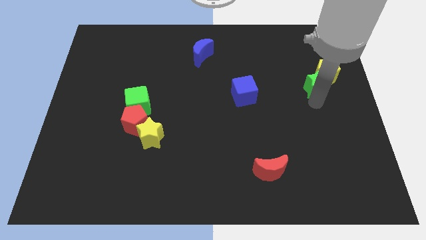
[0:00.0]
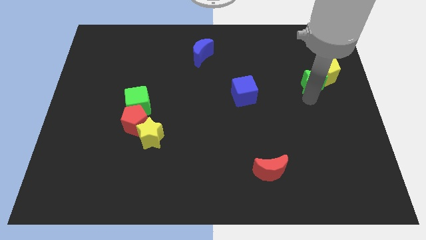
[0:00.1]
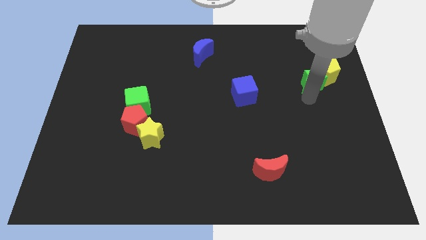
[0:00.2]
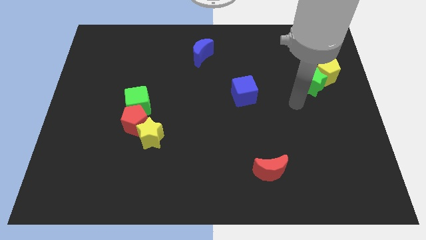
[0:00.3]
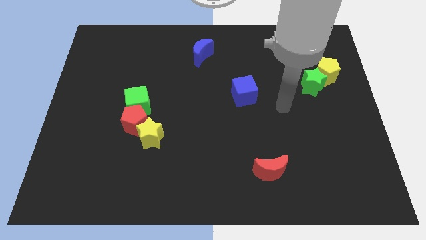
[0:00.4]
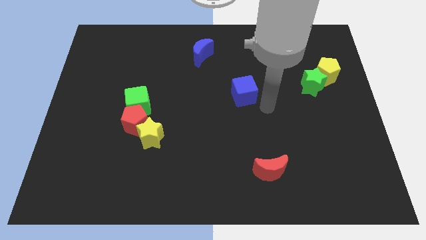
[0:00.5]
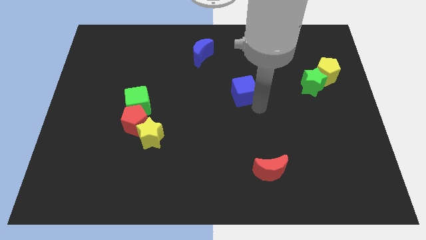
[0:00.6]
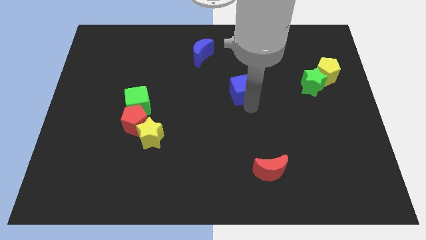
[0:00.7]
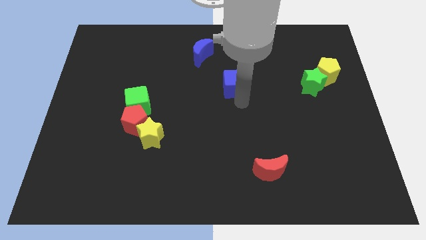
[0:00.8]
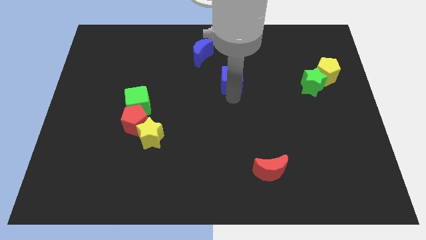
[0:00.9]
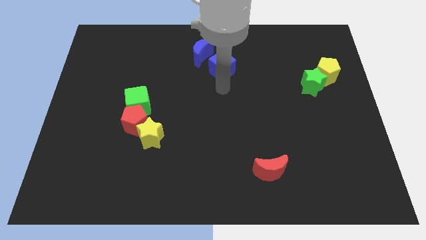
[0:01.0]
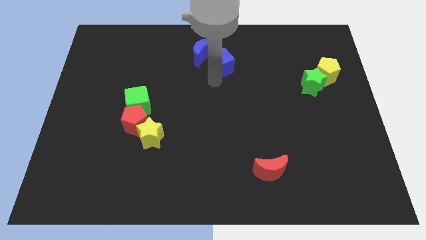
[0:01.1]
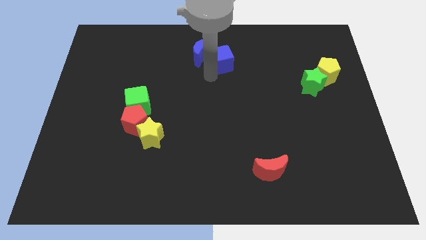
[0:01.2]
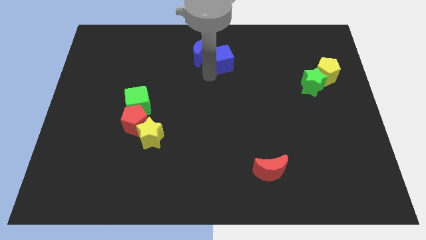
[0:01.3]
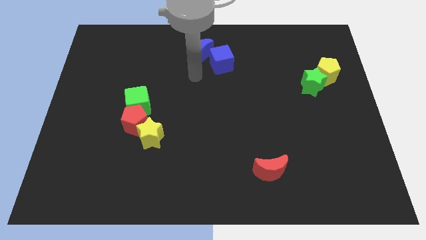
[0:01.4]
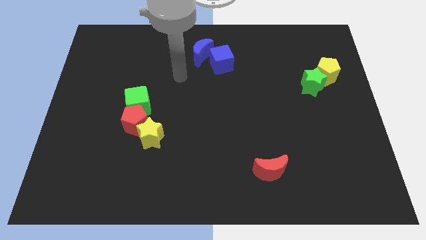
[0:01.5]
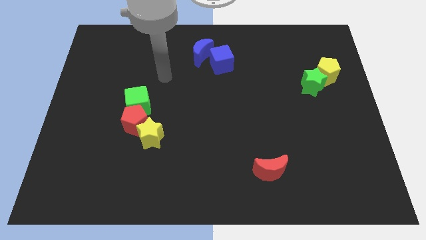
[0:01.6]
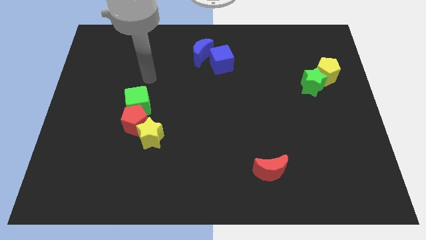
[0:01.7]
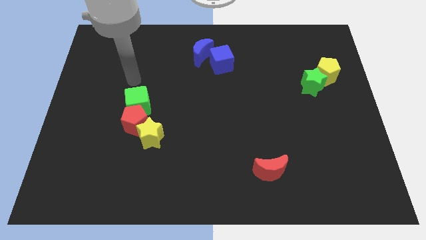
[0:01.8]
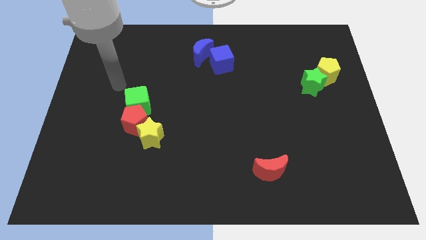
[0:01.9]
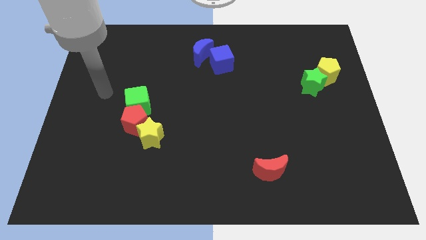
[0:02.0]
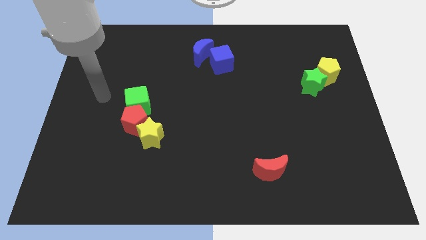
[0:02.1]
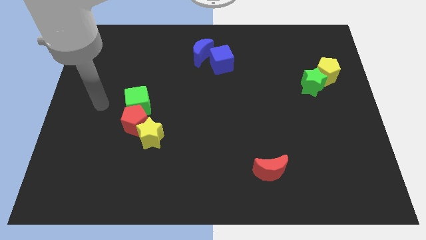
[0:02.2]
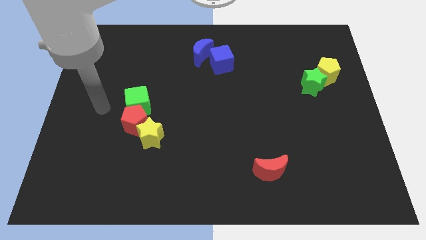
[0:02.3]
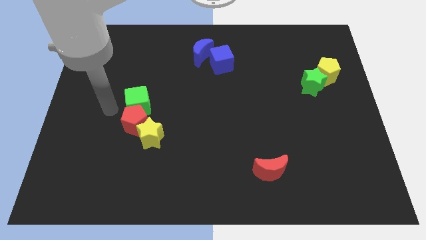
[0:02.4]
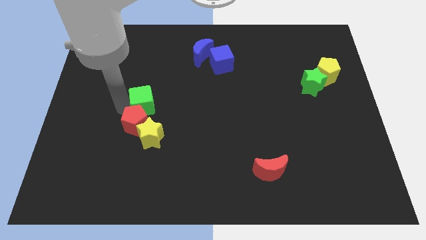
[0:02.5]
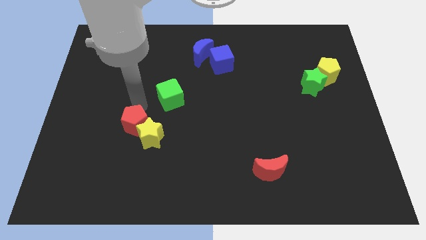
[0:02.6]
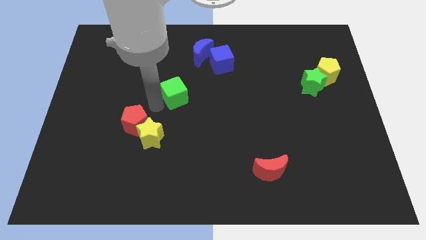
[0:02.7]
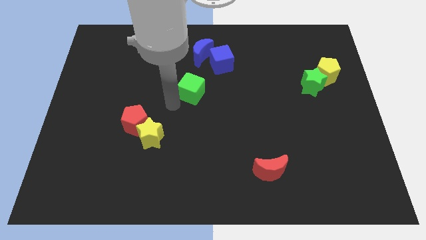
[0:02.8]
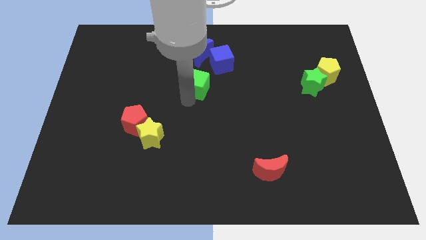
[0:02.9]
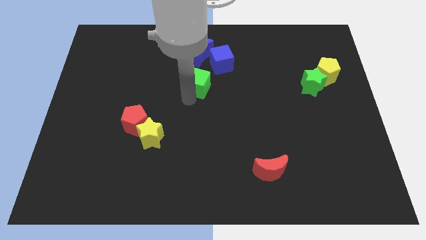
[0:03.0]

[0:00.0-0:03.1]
place the green cube below the blue crescent

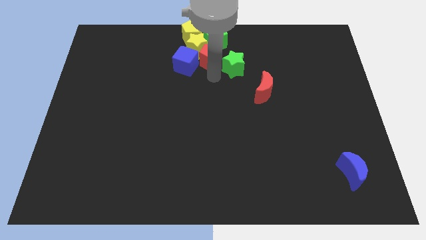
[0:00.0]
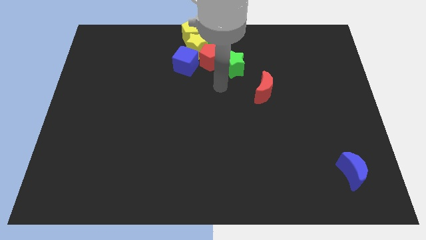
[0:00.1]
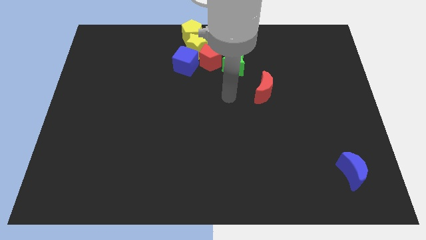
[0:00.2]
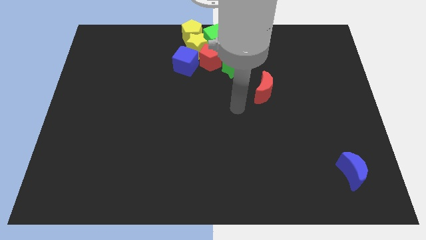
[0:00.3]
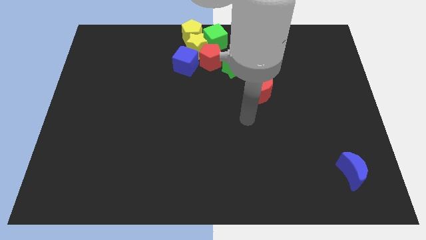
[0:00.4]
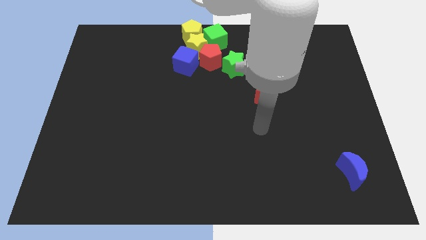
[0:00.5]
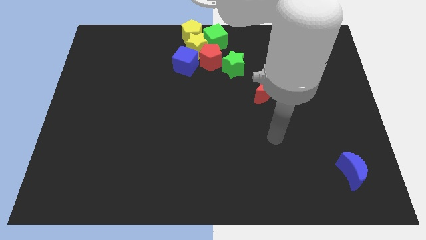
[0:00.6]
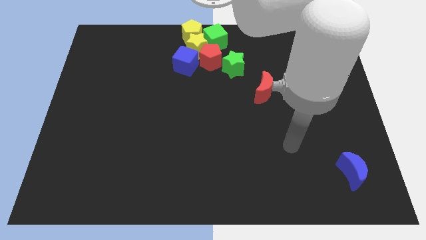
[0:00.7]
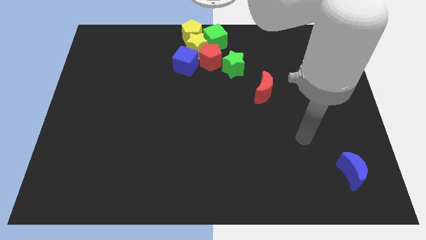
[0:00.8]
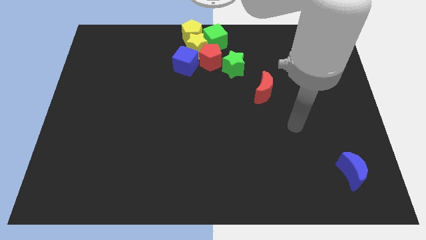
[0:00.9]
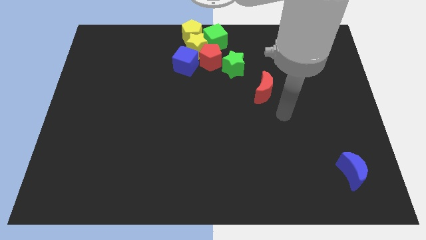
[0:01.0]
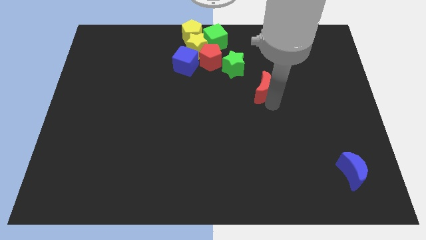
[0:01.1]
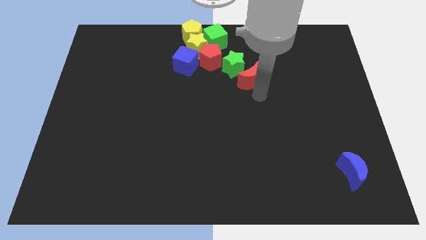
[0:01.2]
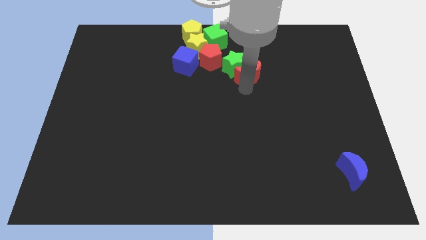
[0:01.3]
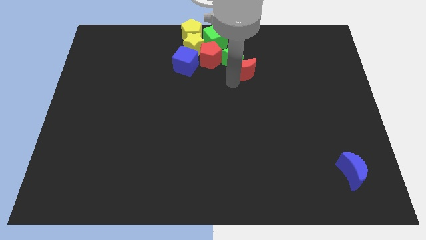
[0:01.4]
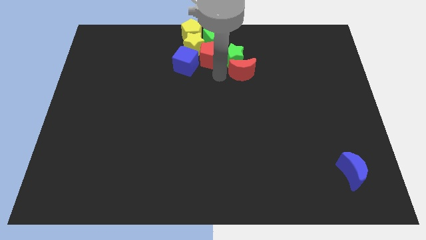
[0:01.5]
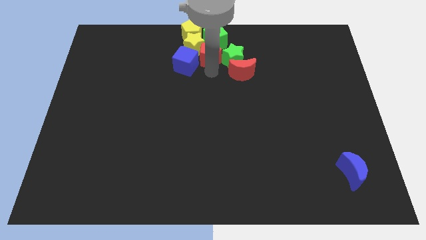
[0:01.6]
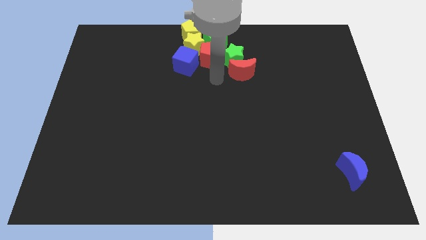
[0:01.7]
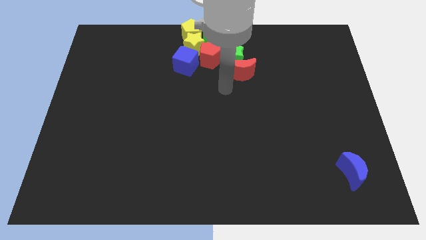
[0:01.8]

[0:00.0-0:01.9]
move the red crescent to the bottom of the green star

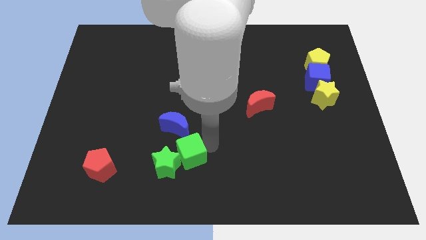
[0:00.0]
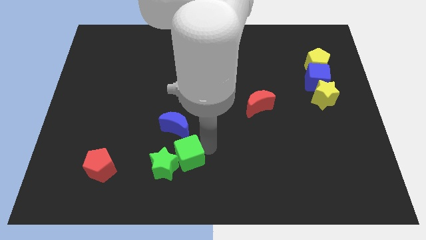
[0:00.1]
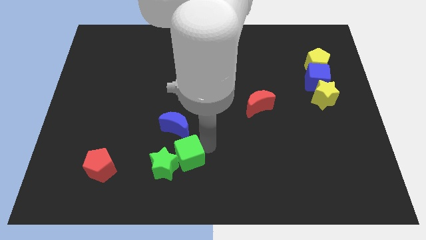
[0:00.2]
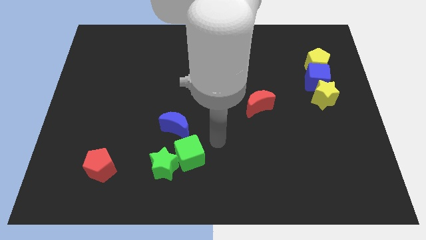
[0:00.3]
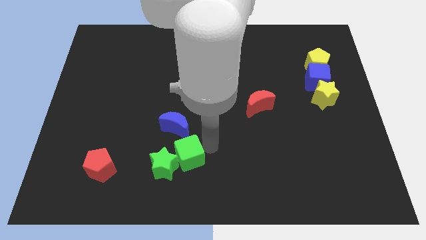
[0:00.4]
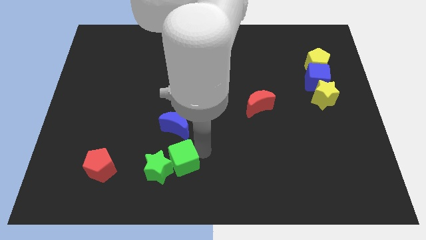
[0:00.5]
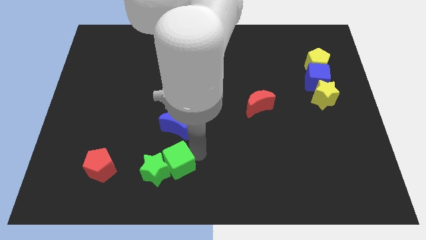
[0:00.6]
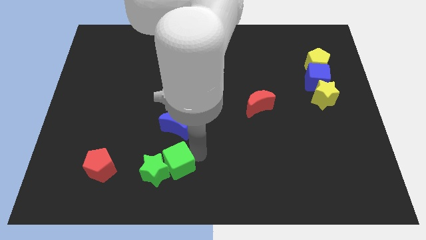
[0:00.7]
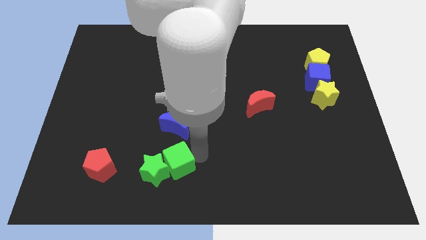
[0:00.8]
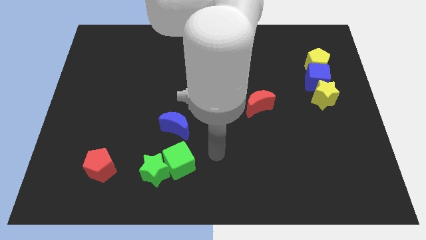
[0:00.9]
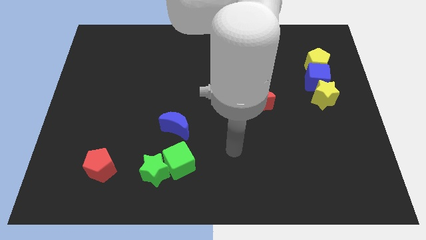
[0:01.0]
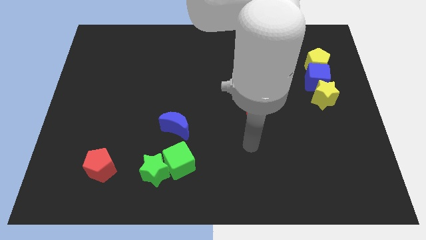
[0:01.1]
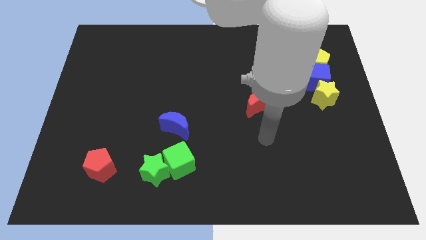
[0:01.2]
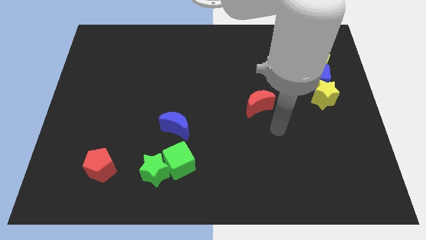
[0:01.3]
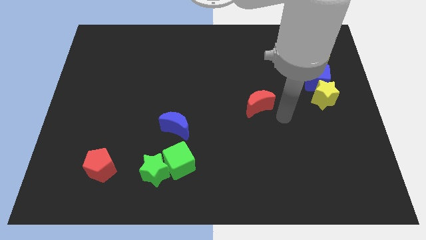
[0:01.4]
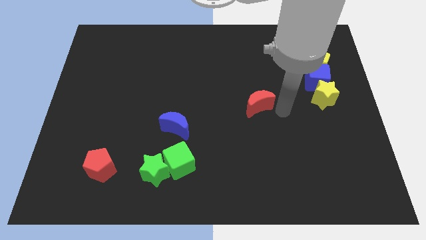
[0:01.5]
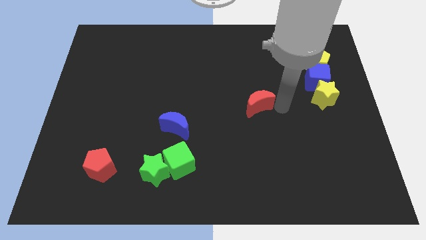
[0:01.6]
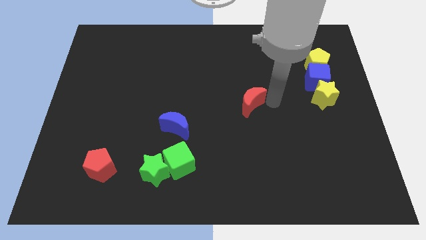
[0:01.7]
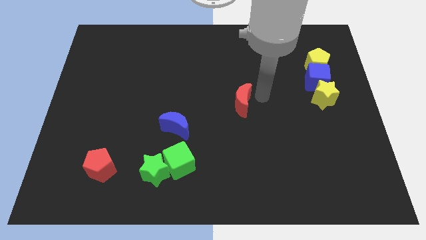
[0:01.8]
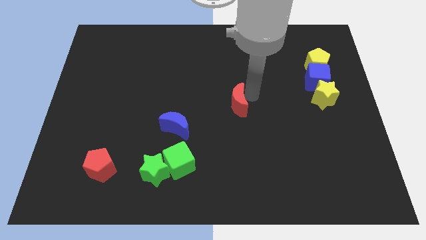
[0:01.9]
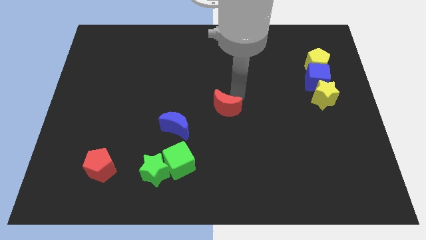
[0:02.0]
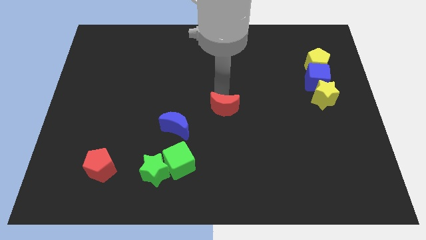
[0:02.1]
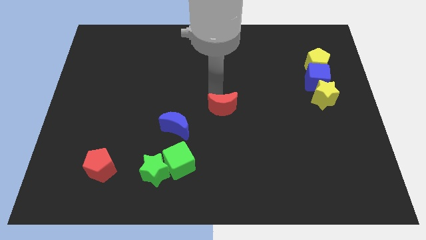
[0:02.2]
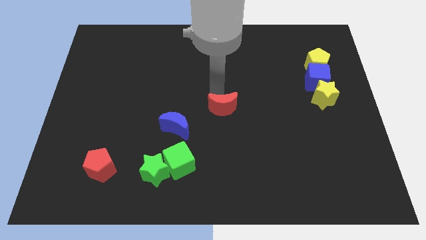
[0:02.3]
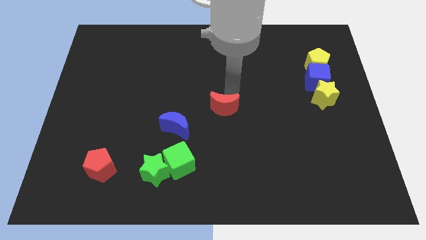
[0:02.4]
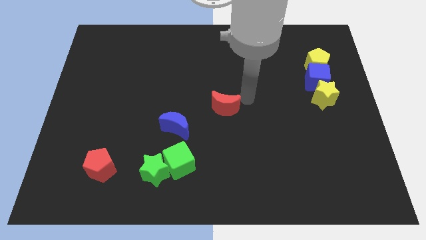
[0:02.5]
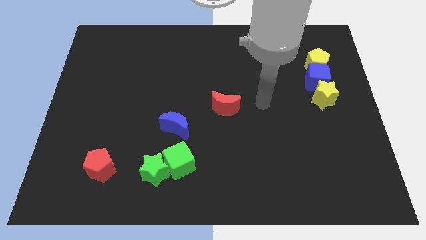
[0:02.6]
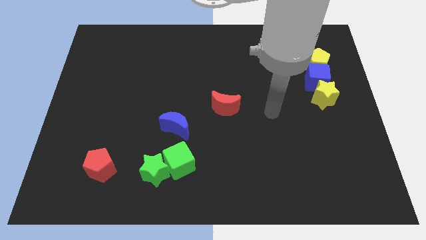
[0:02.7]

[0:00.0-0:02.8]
push the red moon to the middle of the board

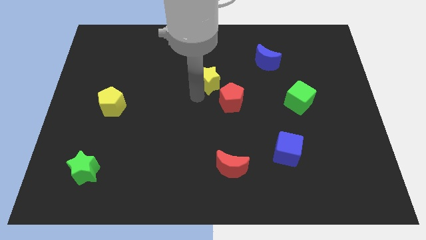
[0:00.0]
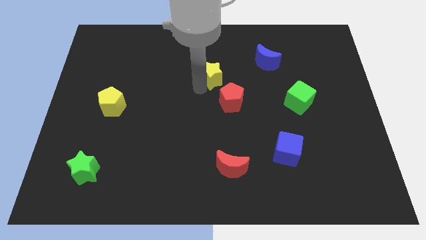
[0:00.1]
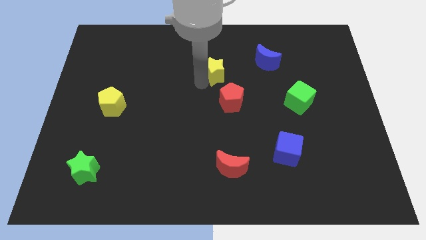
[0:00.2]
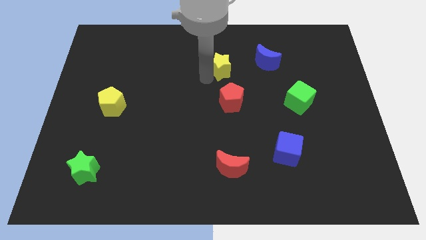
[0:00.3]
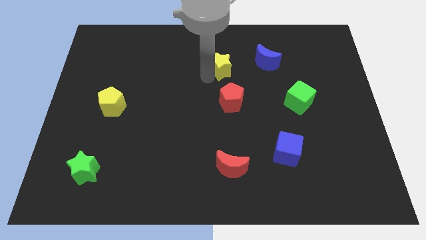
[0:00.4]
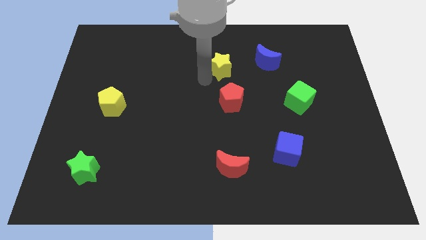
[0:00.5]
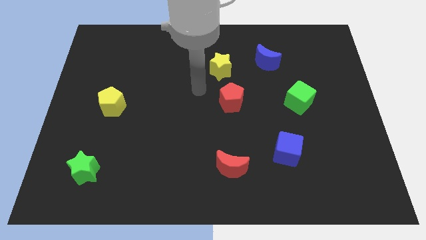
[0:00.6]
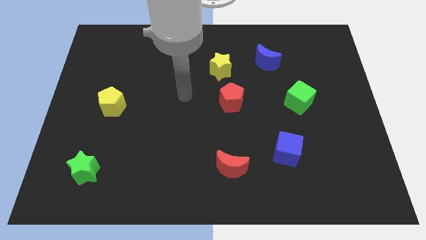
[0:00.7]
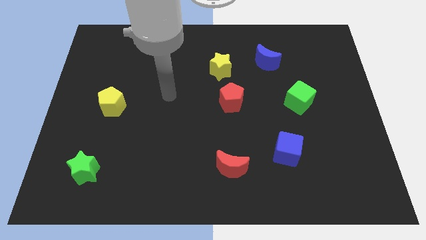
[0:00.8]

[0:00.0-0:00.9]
slide the yellow star slightly towards top

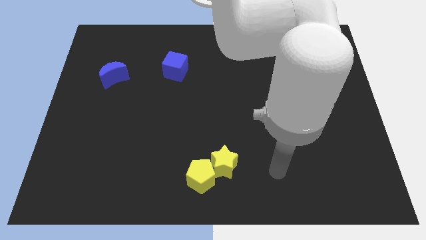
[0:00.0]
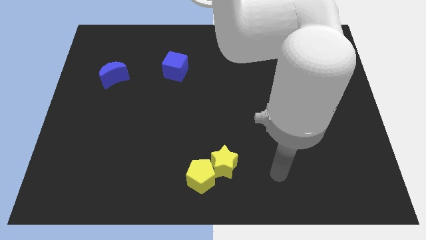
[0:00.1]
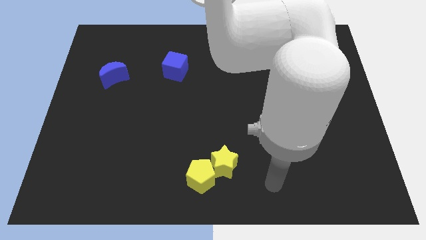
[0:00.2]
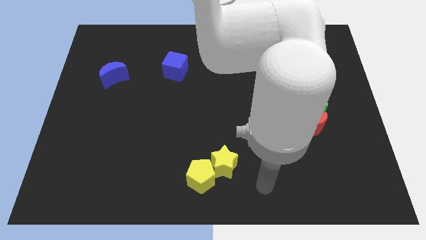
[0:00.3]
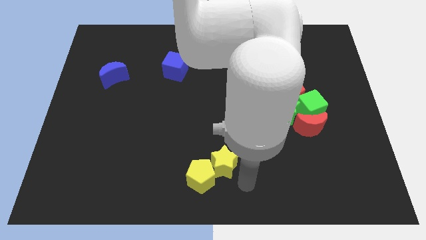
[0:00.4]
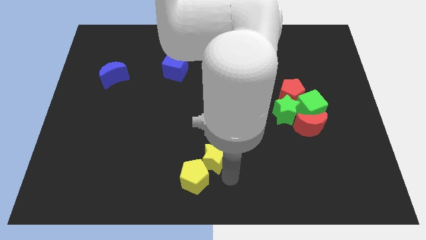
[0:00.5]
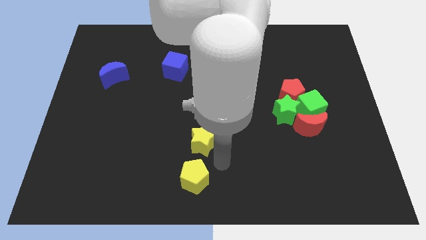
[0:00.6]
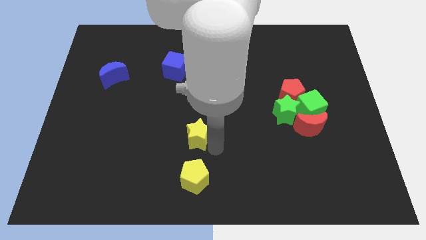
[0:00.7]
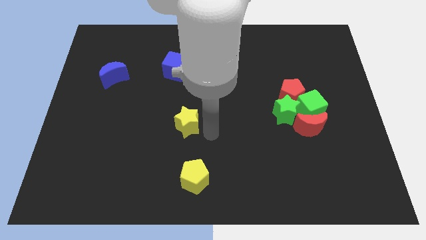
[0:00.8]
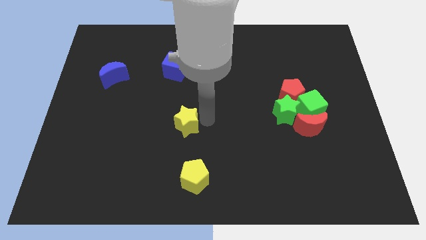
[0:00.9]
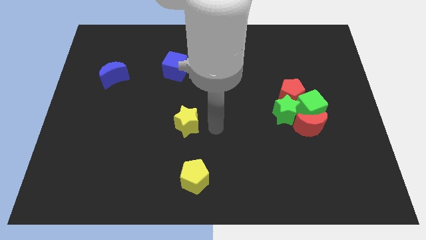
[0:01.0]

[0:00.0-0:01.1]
separate the yellow star from the yellow pentagon
